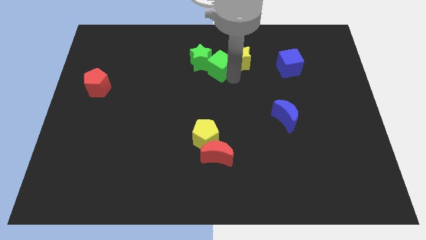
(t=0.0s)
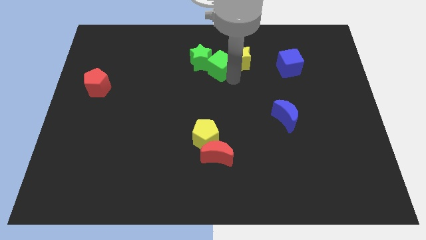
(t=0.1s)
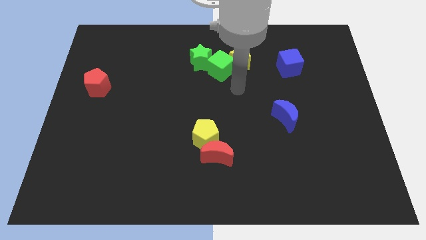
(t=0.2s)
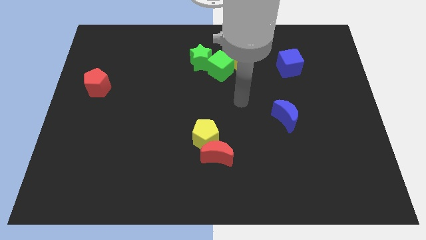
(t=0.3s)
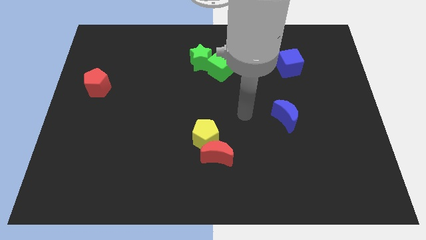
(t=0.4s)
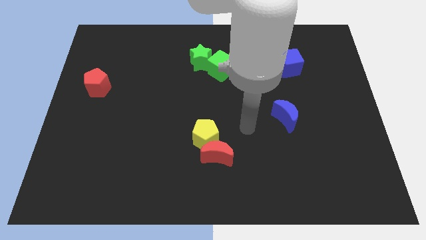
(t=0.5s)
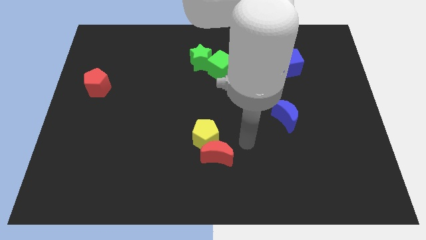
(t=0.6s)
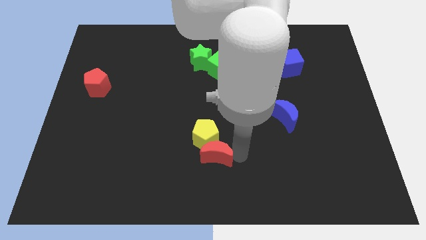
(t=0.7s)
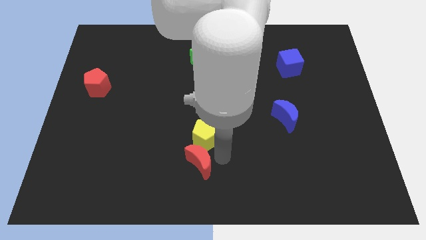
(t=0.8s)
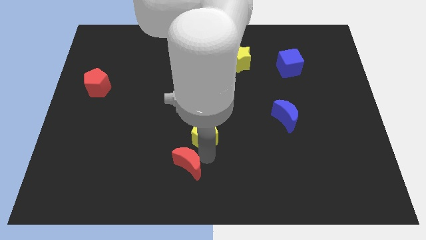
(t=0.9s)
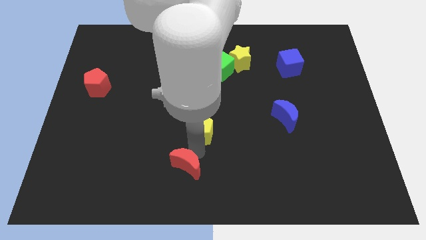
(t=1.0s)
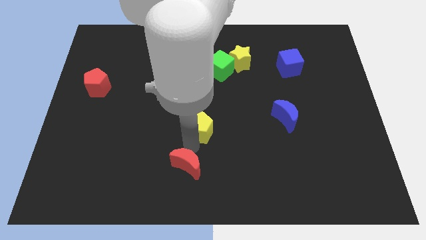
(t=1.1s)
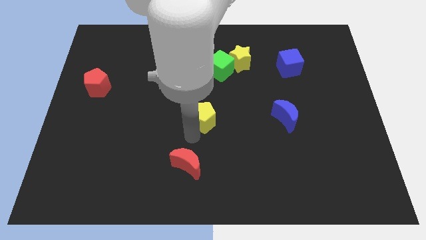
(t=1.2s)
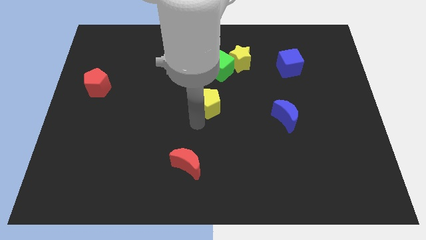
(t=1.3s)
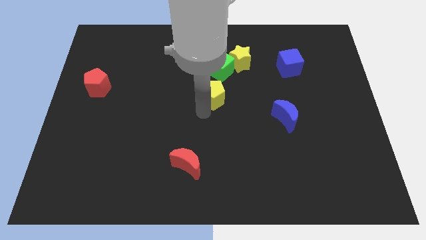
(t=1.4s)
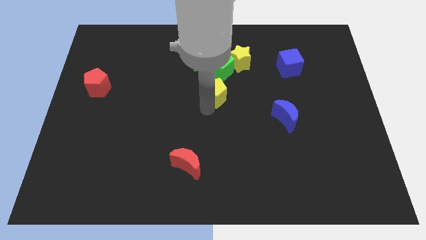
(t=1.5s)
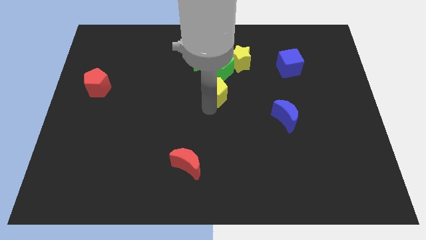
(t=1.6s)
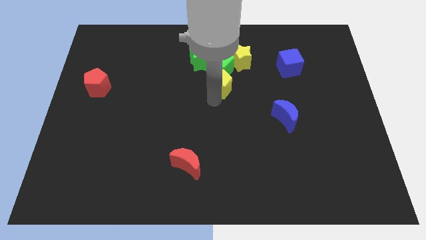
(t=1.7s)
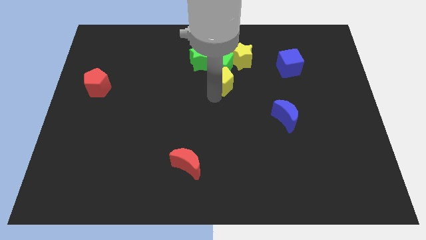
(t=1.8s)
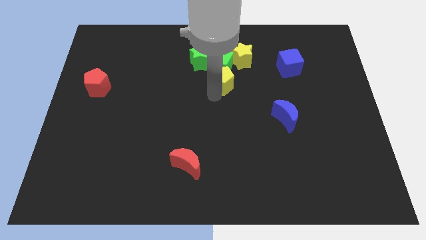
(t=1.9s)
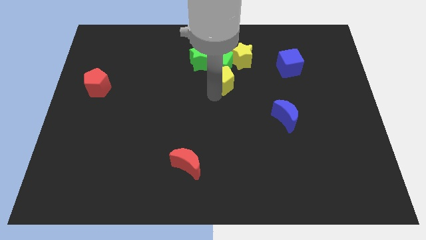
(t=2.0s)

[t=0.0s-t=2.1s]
separate the red moon and yellow pentagon

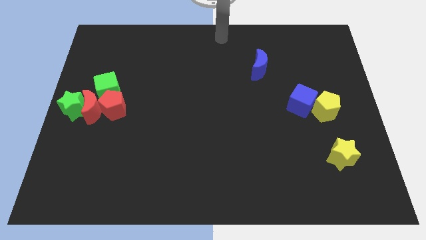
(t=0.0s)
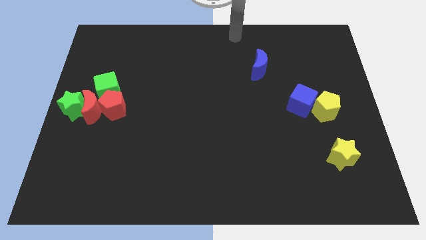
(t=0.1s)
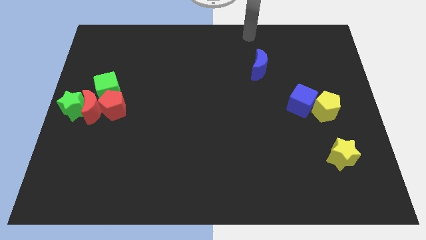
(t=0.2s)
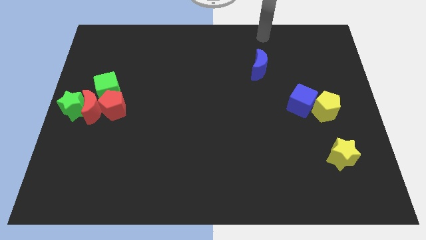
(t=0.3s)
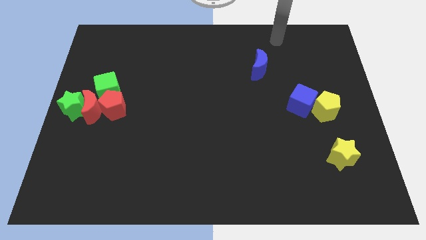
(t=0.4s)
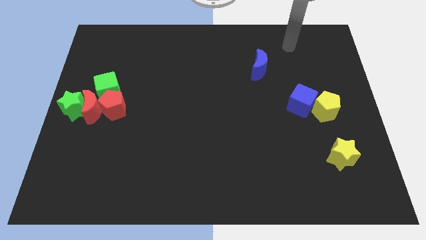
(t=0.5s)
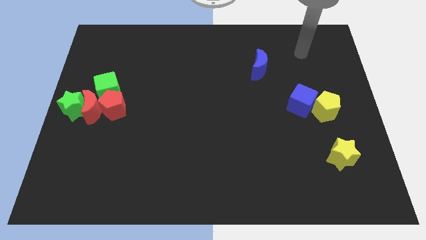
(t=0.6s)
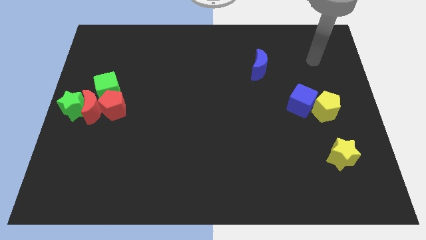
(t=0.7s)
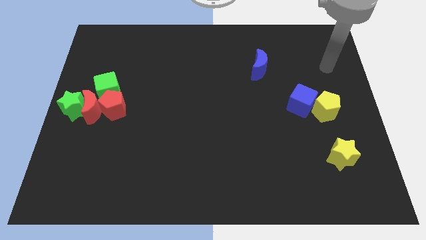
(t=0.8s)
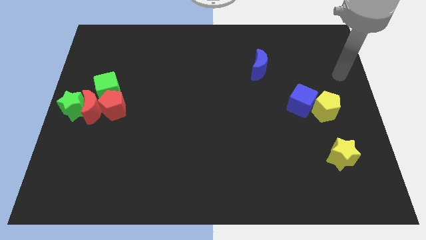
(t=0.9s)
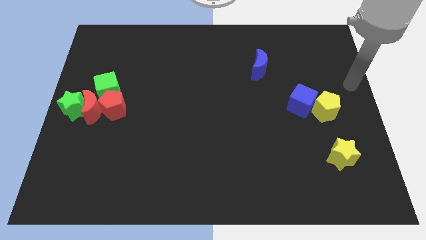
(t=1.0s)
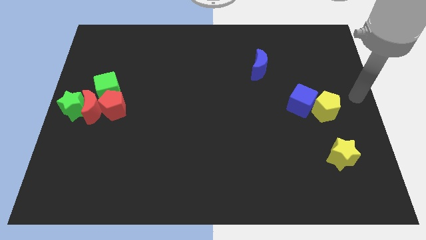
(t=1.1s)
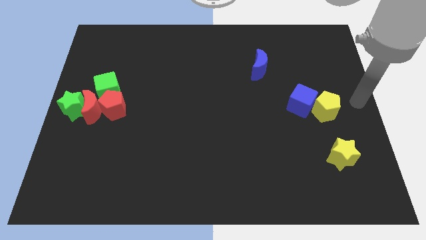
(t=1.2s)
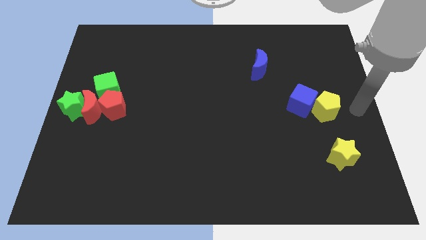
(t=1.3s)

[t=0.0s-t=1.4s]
move your arm to the right of yellow pentagon

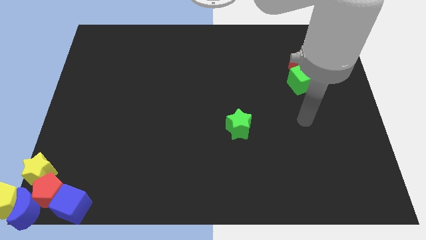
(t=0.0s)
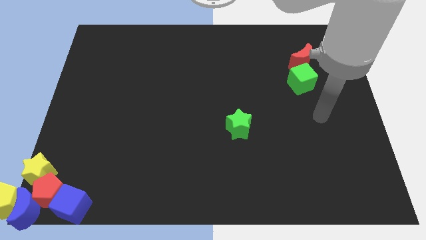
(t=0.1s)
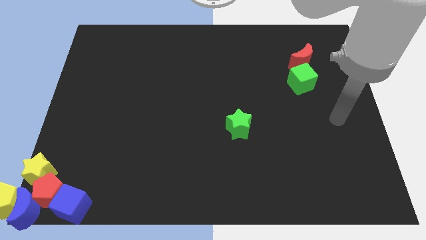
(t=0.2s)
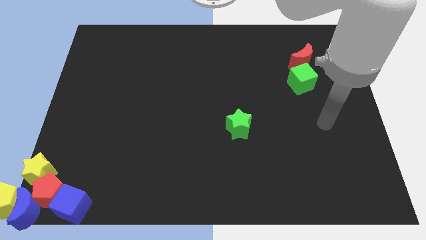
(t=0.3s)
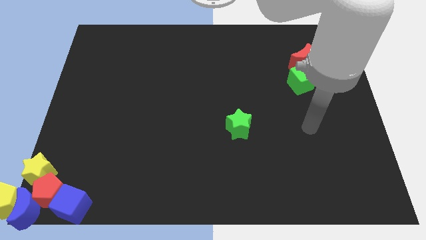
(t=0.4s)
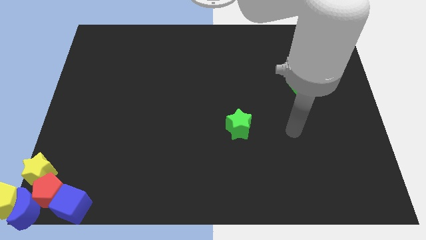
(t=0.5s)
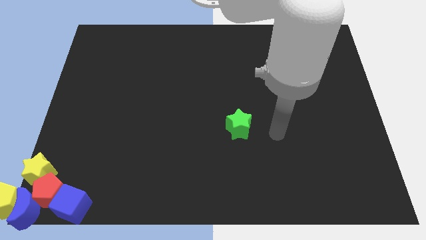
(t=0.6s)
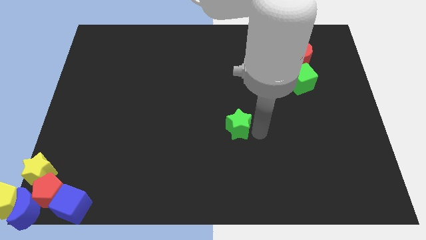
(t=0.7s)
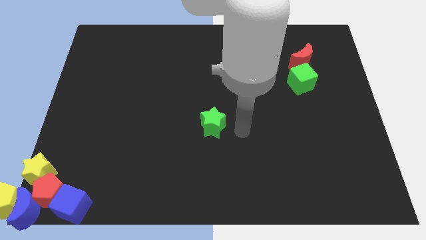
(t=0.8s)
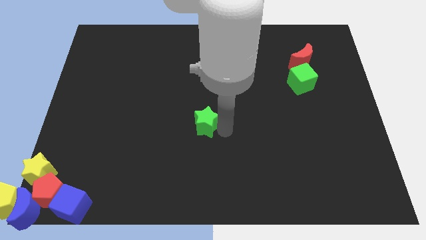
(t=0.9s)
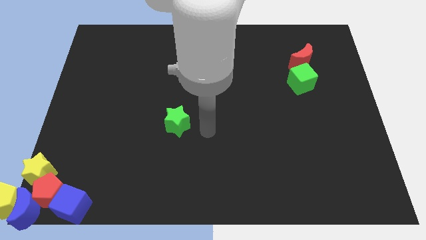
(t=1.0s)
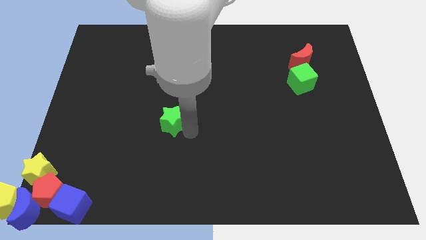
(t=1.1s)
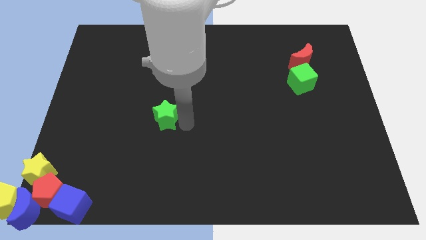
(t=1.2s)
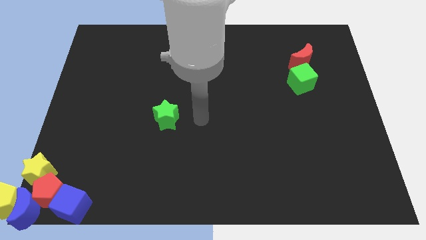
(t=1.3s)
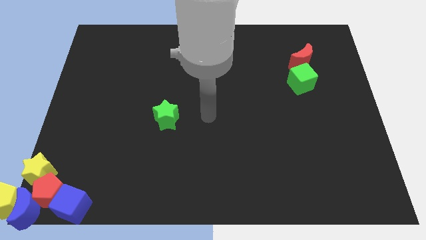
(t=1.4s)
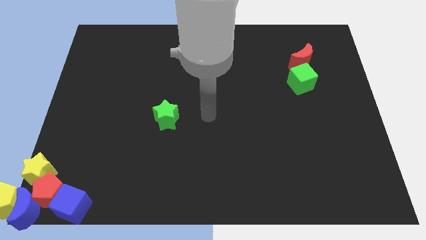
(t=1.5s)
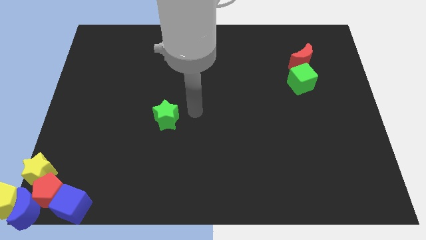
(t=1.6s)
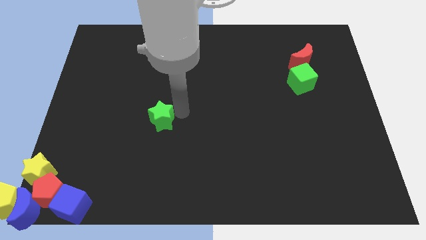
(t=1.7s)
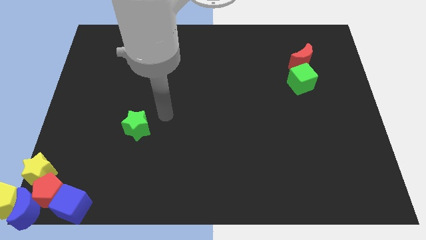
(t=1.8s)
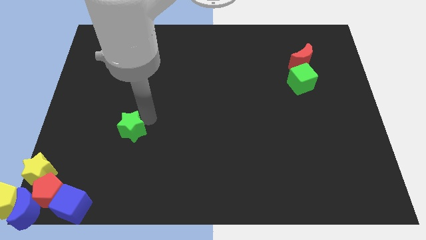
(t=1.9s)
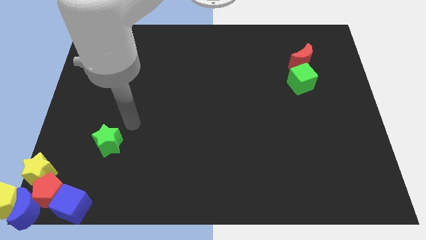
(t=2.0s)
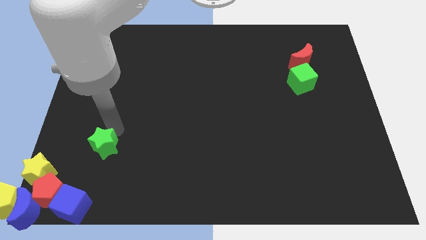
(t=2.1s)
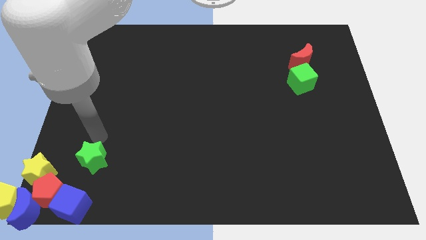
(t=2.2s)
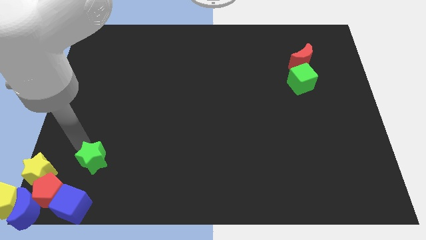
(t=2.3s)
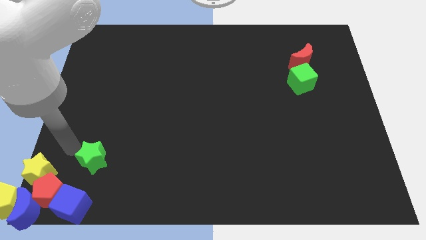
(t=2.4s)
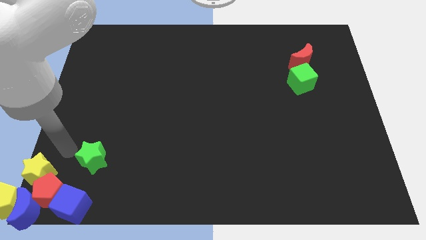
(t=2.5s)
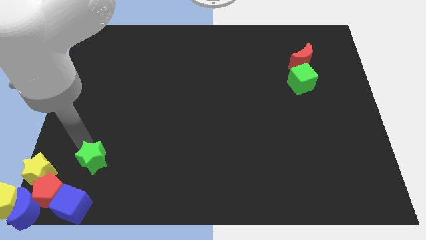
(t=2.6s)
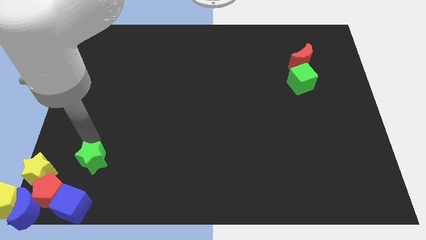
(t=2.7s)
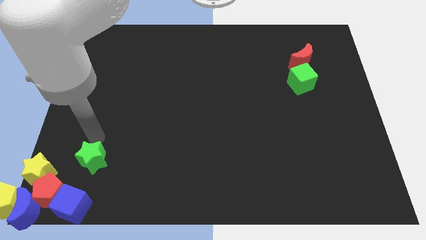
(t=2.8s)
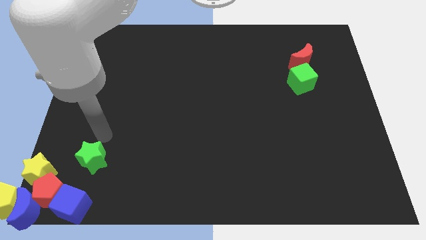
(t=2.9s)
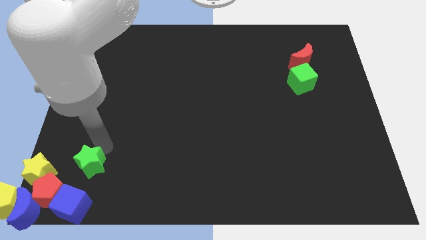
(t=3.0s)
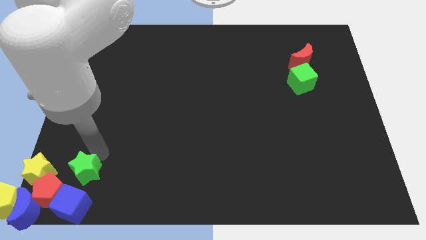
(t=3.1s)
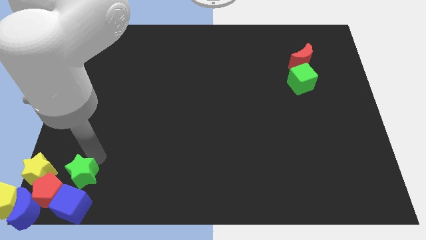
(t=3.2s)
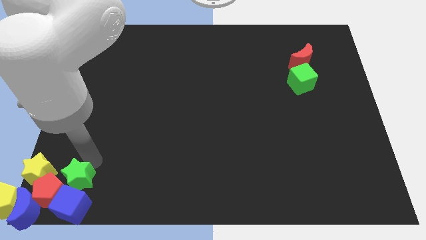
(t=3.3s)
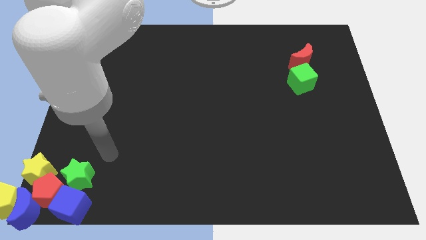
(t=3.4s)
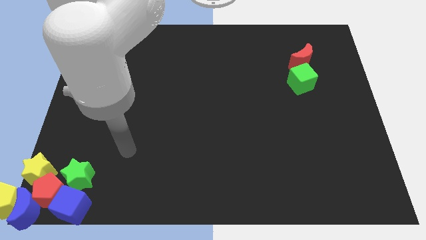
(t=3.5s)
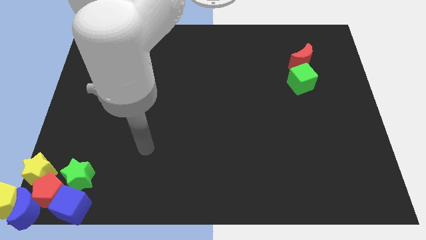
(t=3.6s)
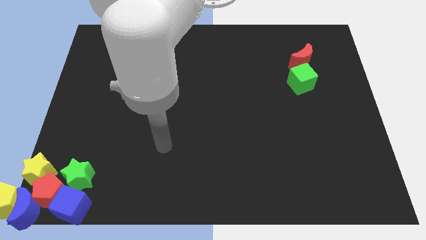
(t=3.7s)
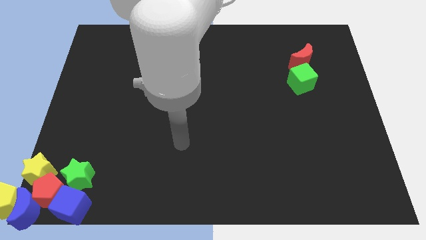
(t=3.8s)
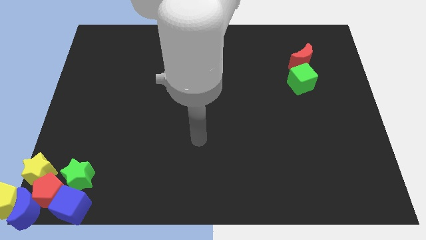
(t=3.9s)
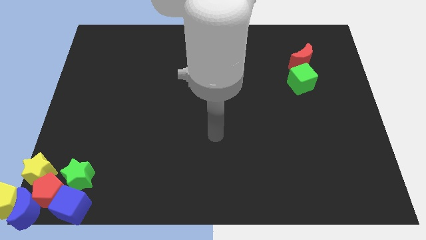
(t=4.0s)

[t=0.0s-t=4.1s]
move the green star to the bottom left of the board

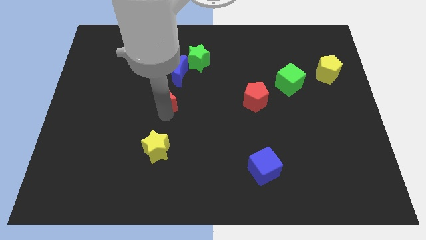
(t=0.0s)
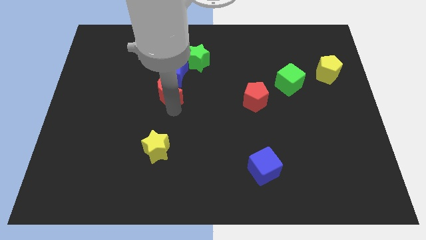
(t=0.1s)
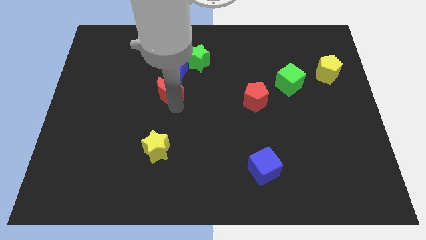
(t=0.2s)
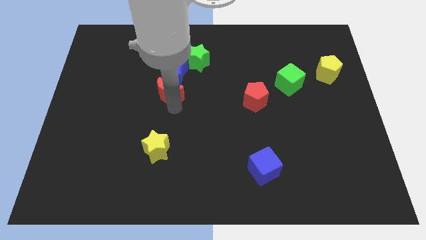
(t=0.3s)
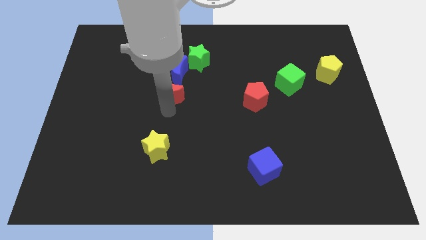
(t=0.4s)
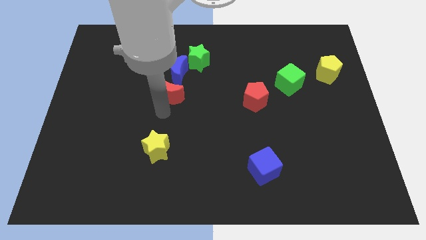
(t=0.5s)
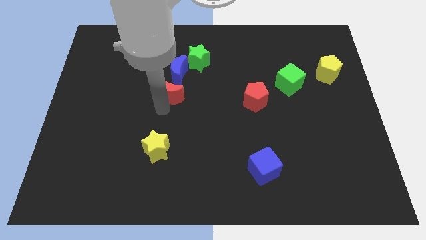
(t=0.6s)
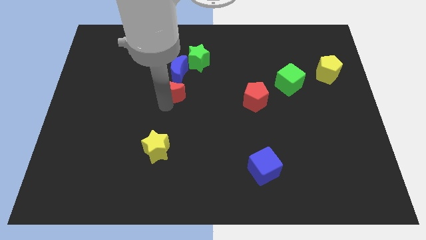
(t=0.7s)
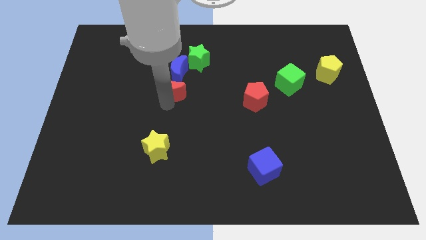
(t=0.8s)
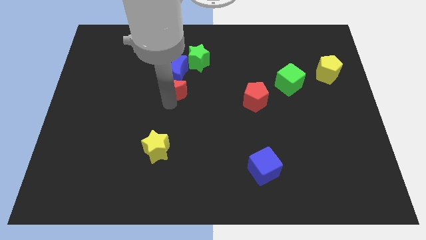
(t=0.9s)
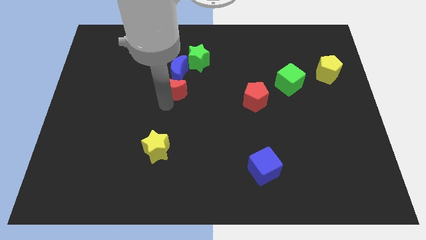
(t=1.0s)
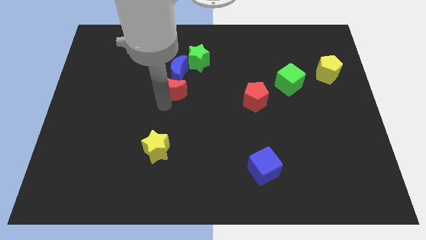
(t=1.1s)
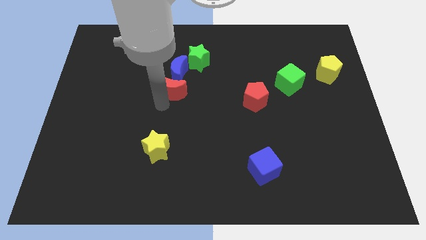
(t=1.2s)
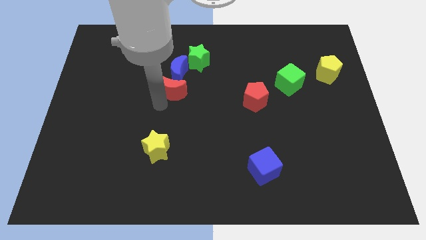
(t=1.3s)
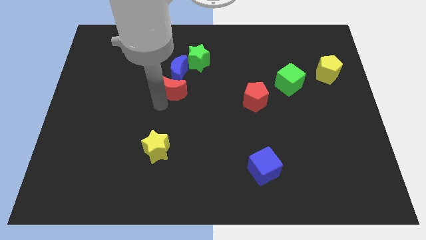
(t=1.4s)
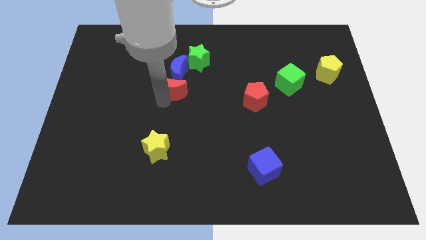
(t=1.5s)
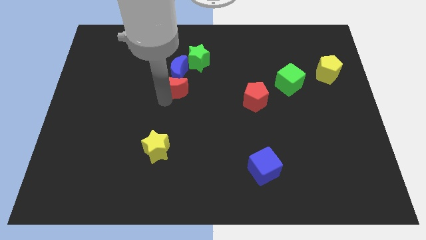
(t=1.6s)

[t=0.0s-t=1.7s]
adjust the red moon at the bottom of the blue crescent
